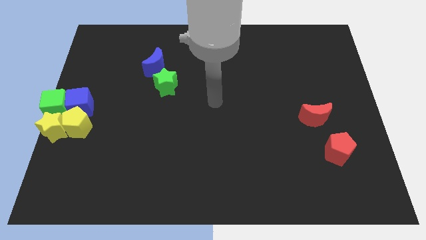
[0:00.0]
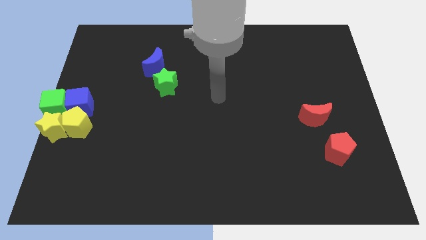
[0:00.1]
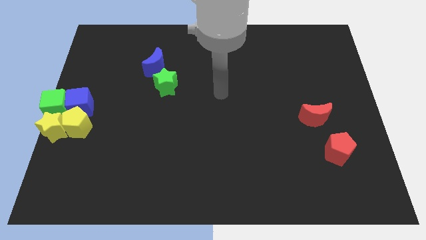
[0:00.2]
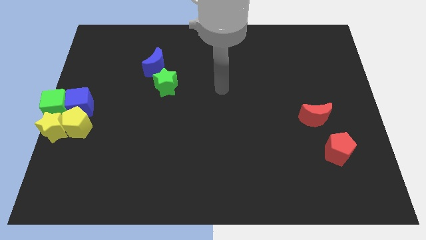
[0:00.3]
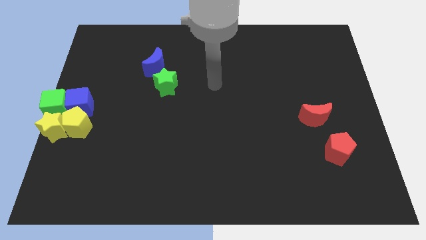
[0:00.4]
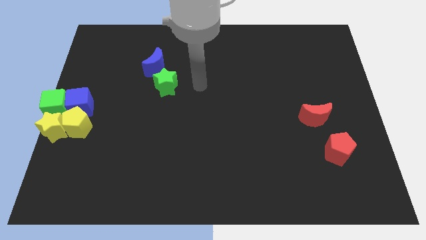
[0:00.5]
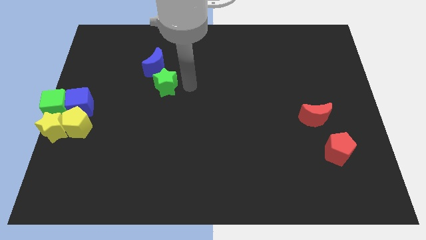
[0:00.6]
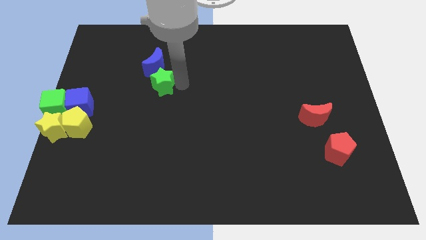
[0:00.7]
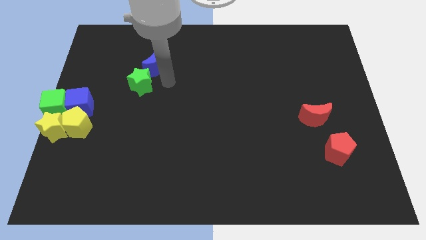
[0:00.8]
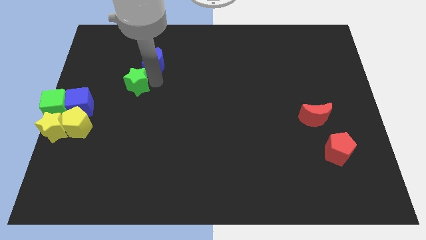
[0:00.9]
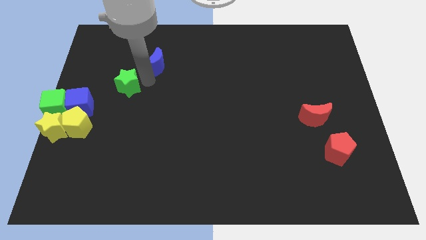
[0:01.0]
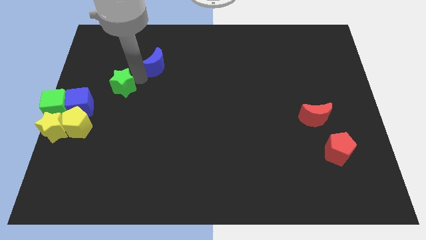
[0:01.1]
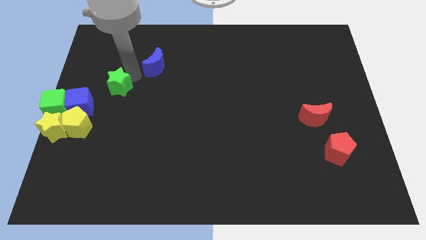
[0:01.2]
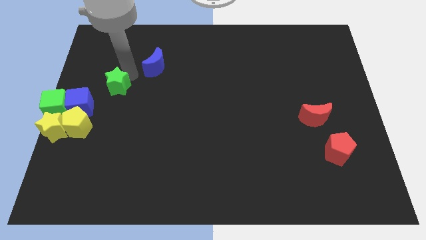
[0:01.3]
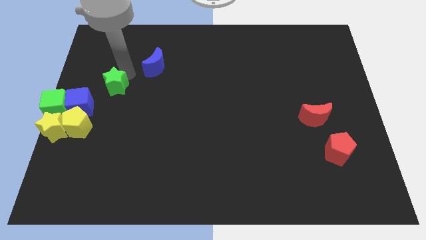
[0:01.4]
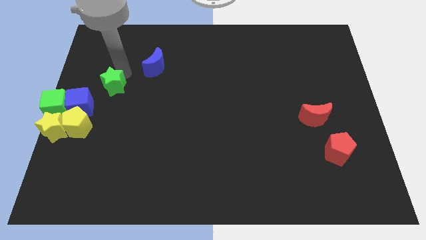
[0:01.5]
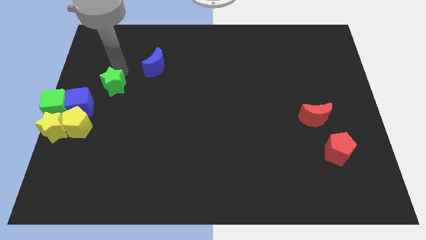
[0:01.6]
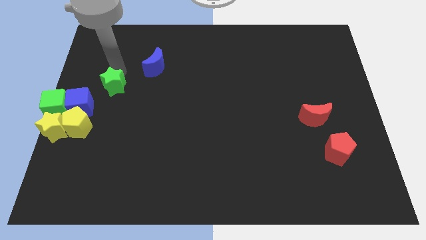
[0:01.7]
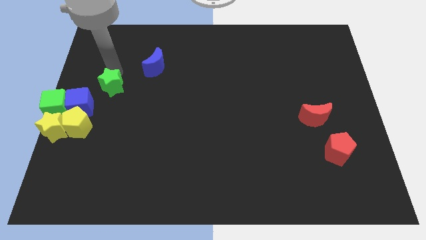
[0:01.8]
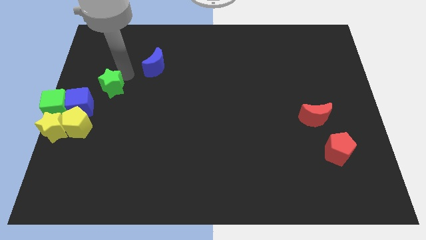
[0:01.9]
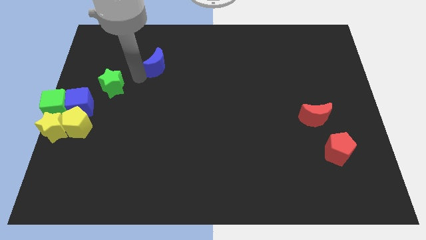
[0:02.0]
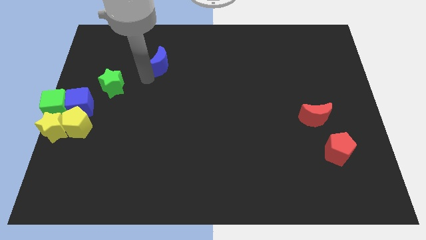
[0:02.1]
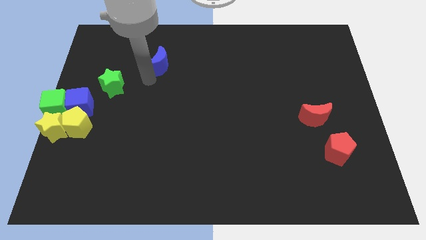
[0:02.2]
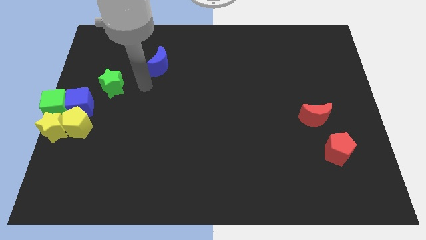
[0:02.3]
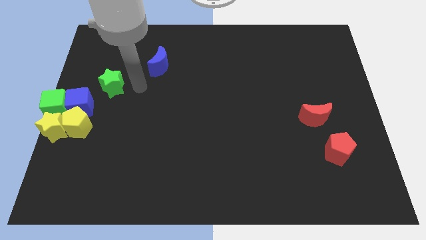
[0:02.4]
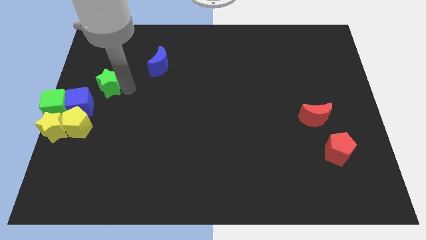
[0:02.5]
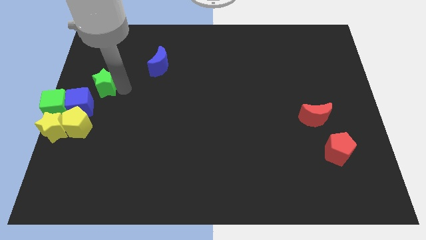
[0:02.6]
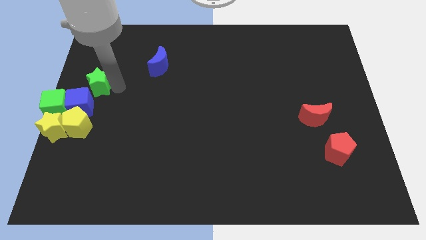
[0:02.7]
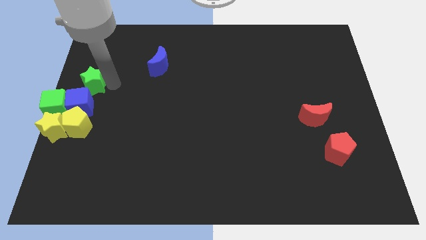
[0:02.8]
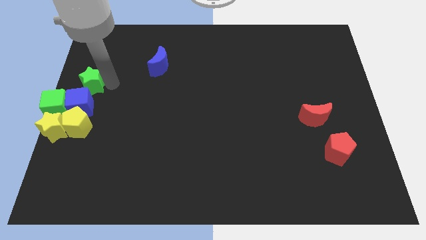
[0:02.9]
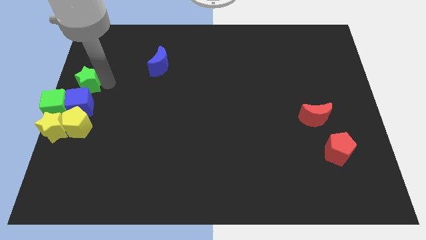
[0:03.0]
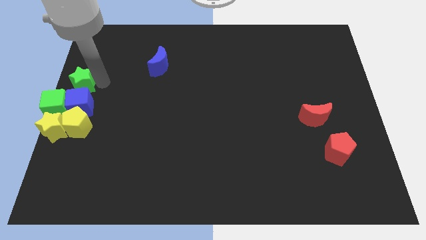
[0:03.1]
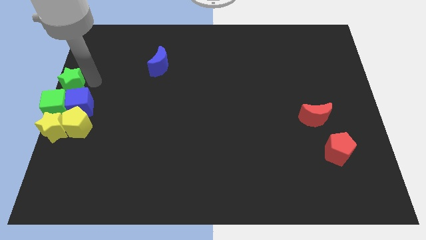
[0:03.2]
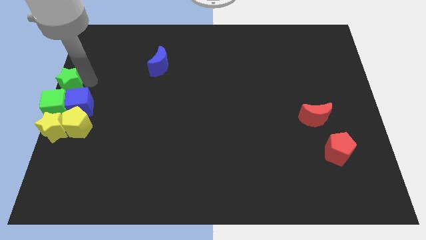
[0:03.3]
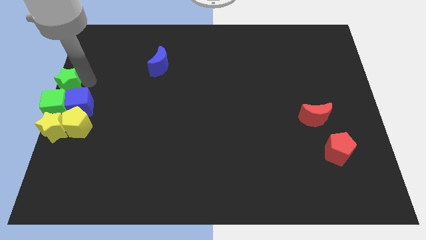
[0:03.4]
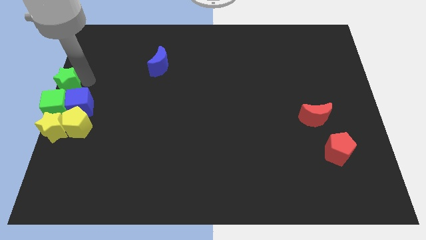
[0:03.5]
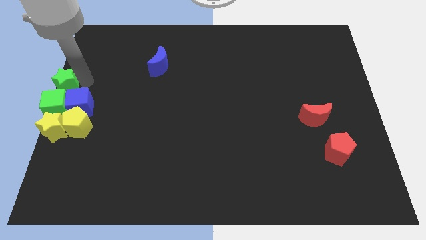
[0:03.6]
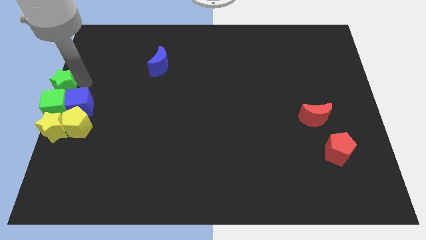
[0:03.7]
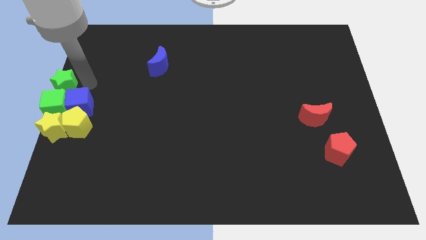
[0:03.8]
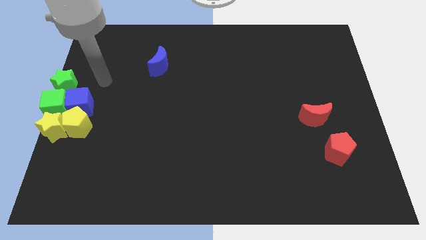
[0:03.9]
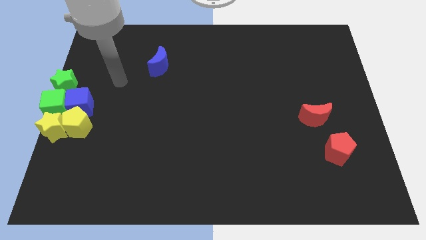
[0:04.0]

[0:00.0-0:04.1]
push the green star to the top side of the green cube

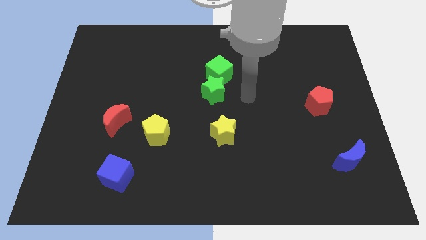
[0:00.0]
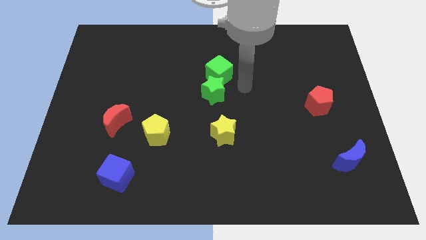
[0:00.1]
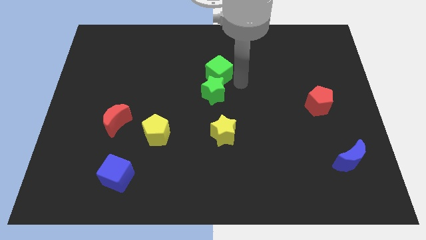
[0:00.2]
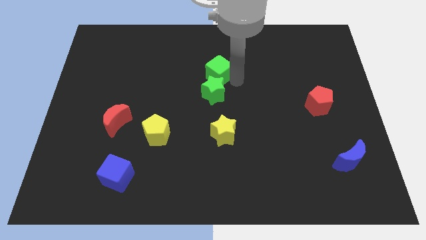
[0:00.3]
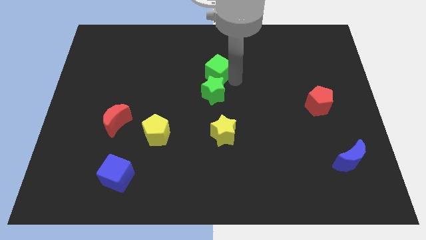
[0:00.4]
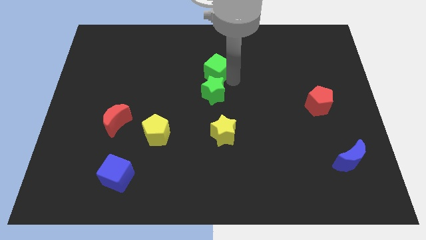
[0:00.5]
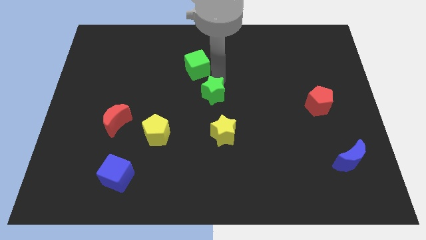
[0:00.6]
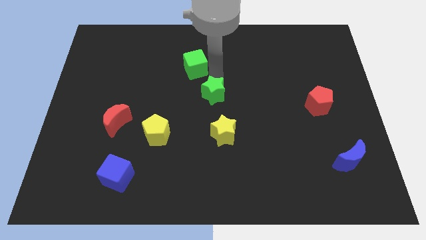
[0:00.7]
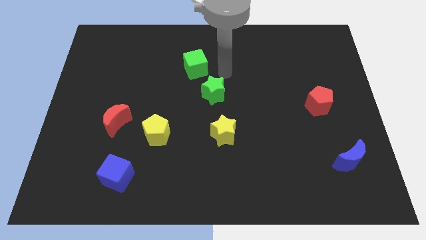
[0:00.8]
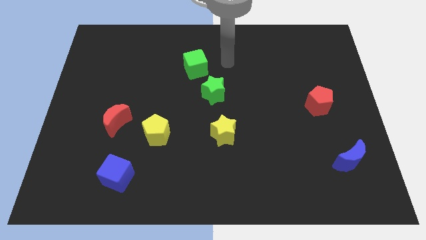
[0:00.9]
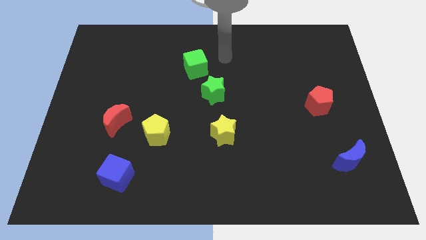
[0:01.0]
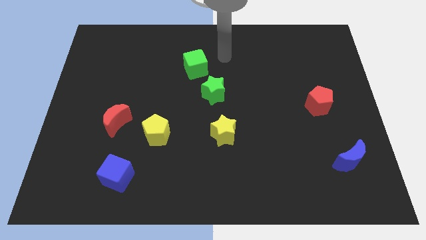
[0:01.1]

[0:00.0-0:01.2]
move the green cube away from the green star

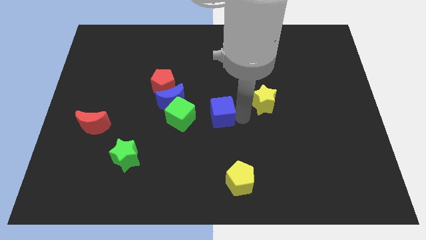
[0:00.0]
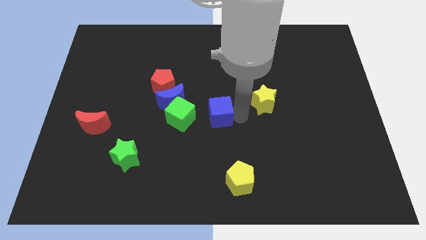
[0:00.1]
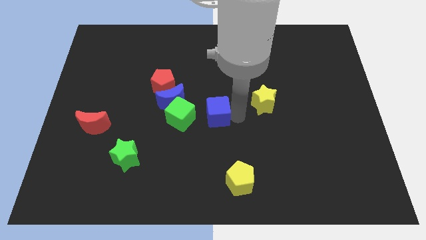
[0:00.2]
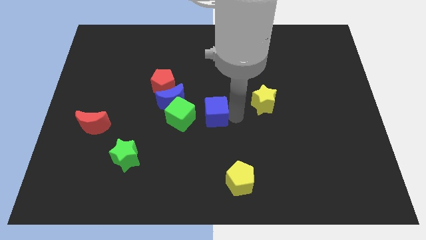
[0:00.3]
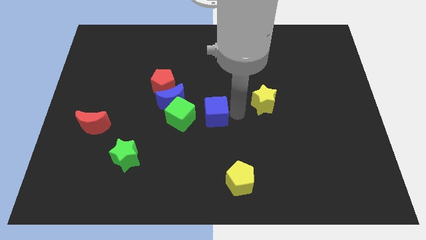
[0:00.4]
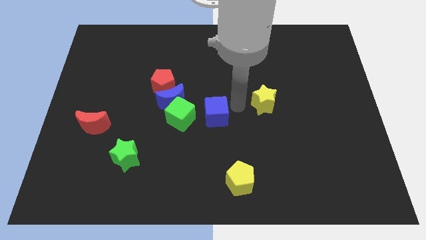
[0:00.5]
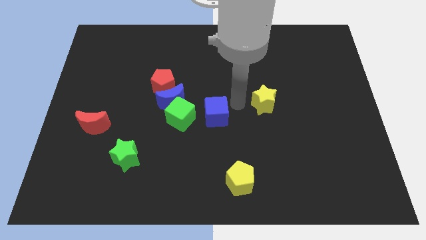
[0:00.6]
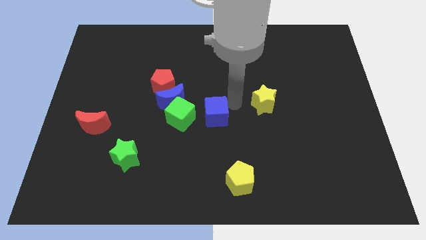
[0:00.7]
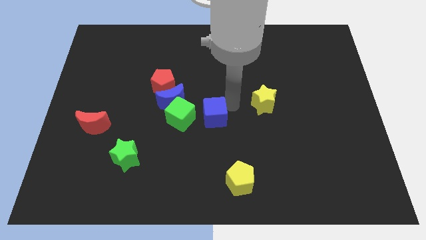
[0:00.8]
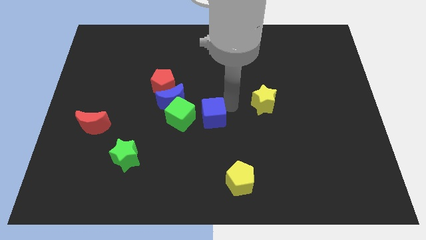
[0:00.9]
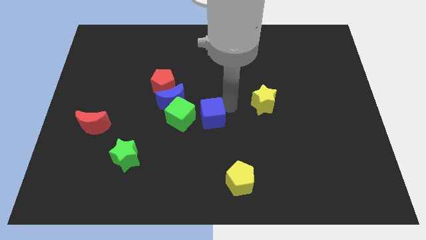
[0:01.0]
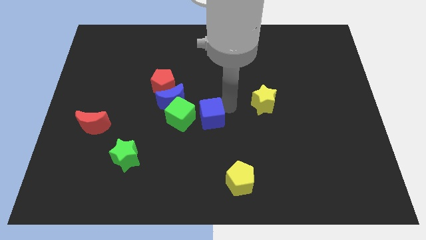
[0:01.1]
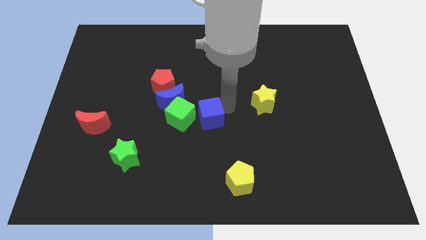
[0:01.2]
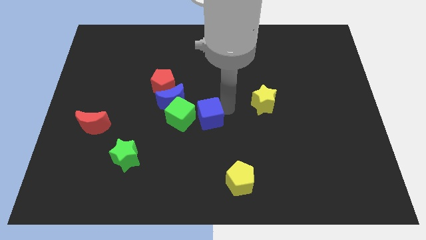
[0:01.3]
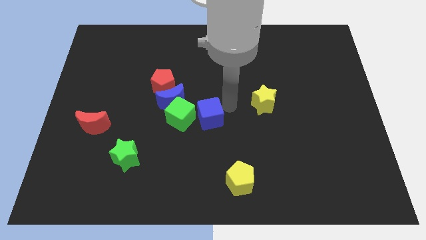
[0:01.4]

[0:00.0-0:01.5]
place the blue cube right of the green cube

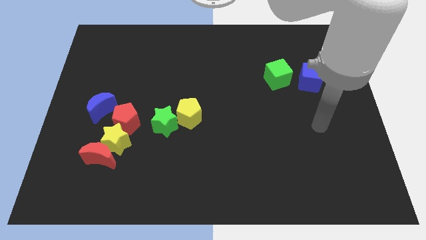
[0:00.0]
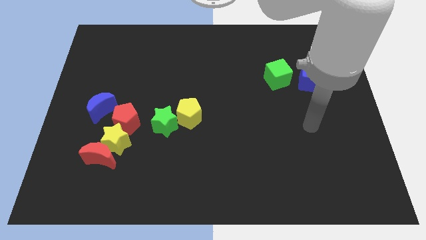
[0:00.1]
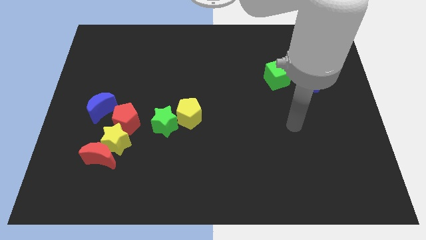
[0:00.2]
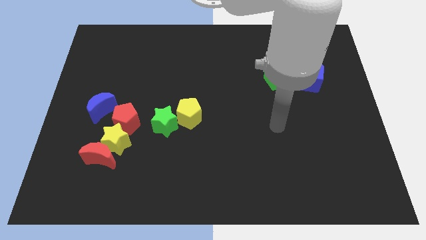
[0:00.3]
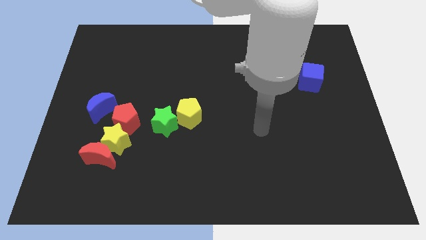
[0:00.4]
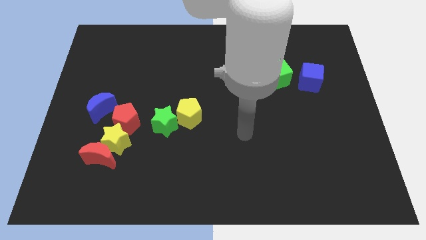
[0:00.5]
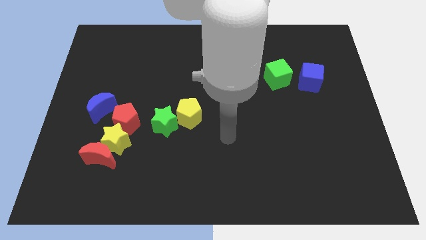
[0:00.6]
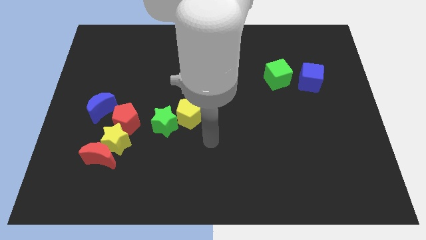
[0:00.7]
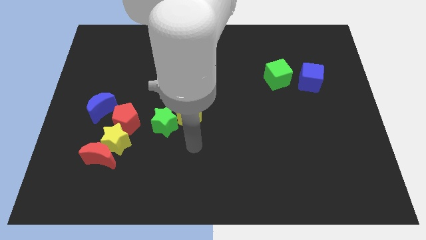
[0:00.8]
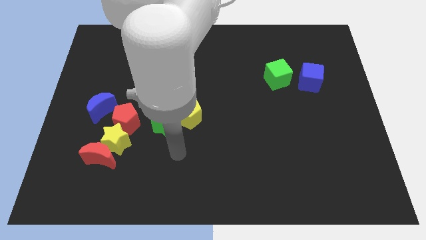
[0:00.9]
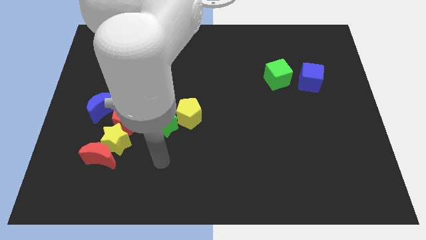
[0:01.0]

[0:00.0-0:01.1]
move your arm at the bottom of the green star

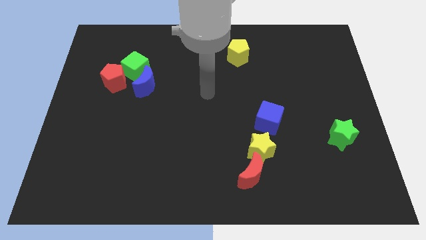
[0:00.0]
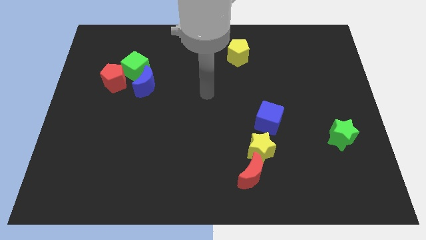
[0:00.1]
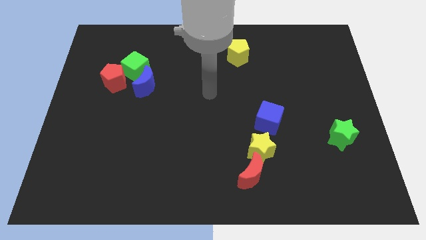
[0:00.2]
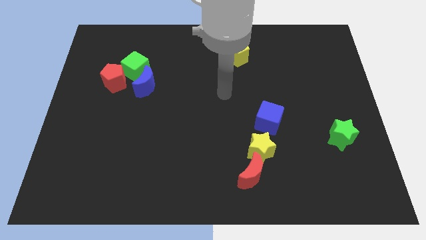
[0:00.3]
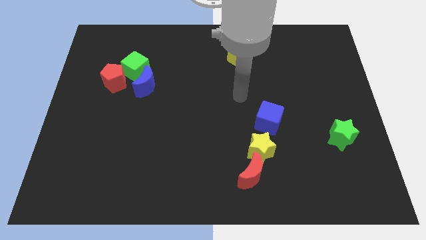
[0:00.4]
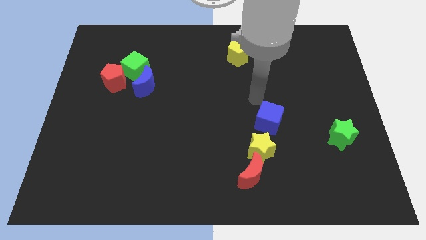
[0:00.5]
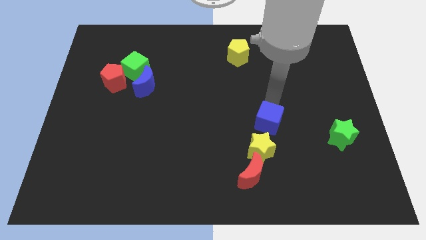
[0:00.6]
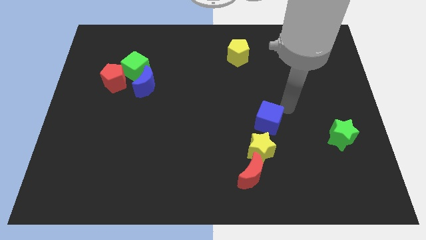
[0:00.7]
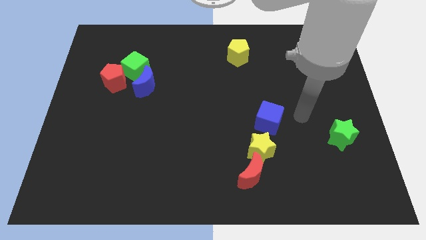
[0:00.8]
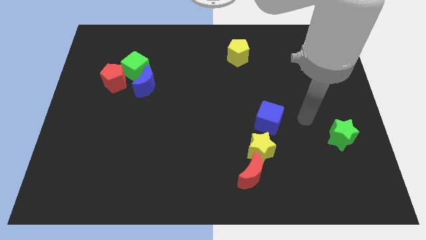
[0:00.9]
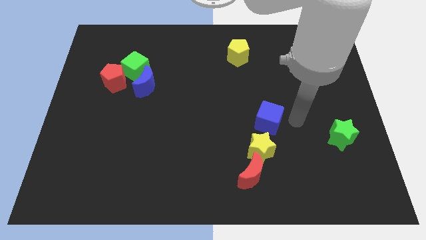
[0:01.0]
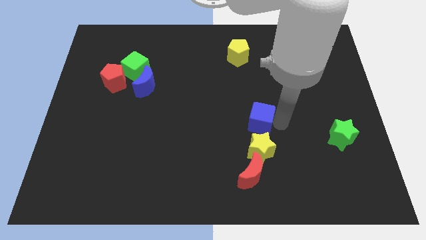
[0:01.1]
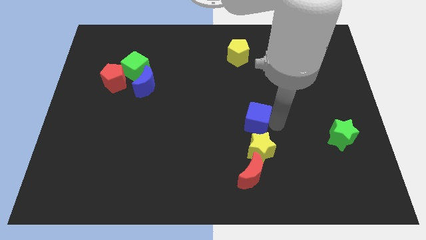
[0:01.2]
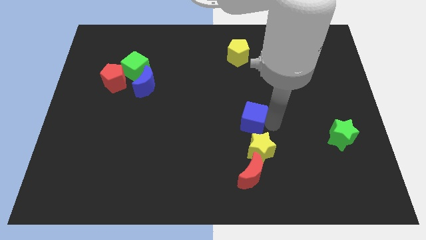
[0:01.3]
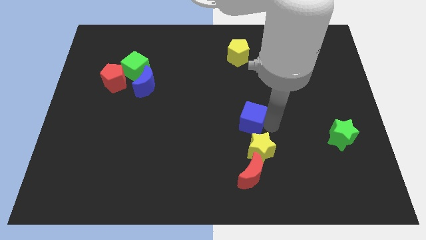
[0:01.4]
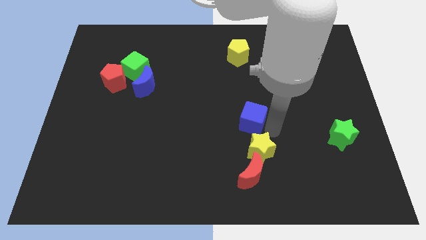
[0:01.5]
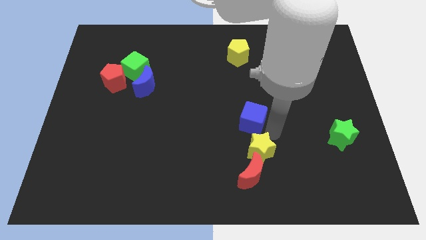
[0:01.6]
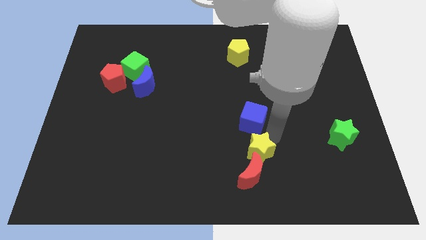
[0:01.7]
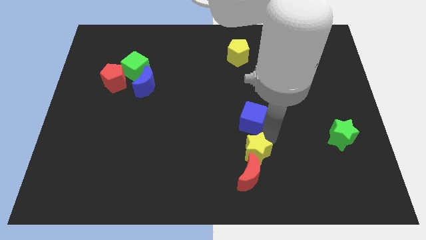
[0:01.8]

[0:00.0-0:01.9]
move your arm close to the yellow star
